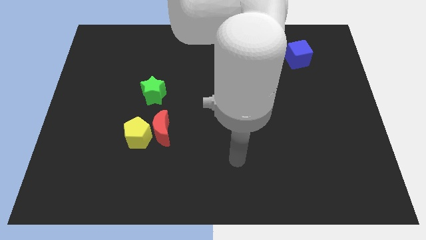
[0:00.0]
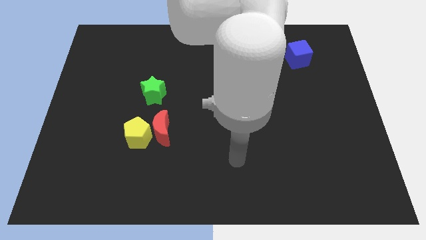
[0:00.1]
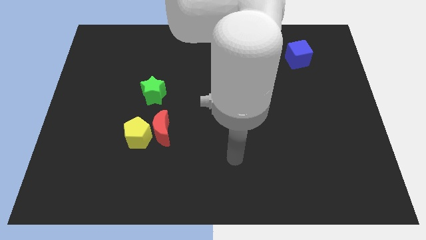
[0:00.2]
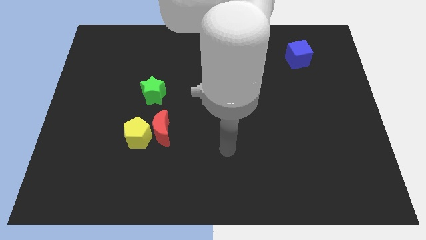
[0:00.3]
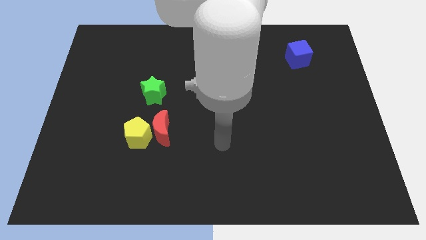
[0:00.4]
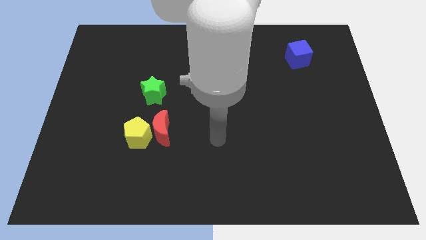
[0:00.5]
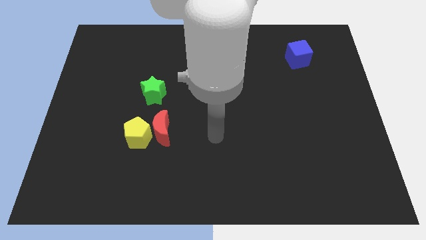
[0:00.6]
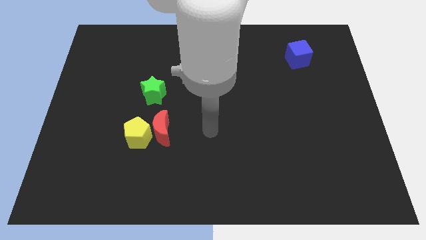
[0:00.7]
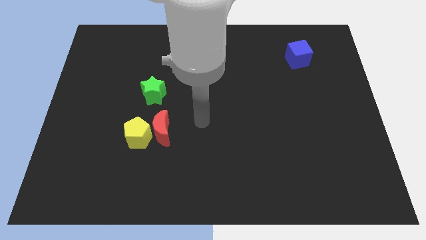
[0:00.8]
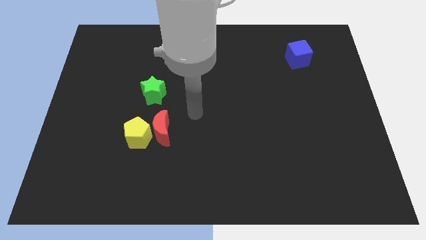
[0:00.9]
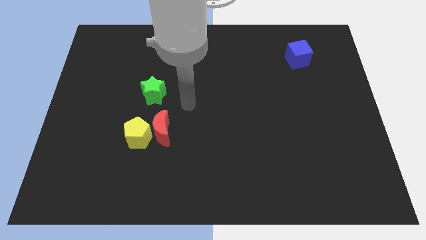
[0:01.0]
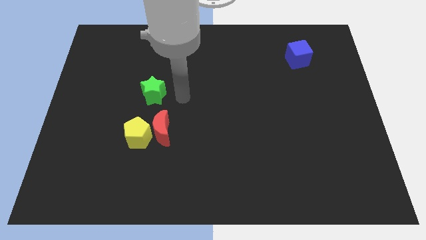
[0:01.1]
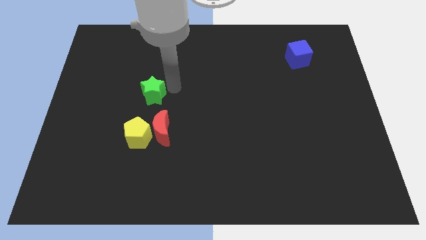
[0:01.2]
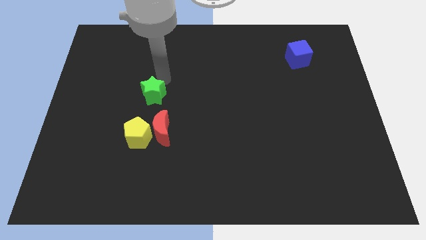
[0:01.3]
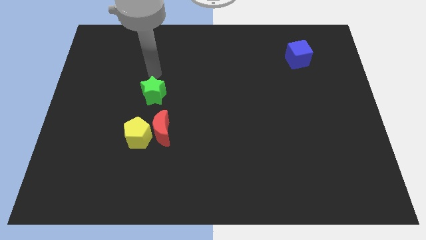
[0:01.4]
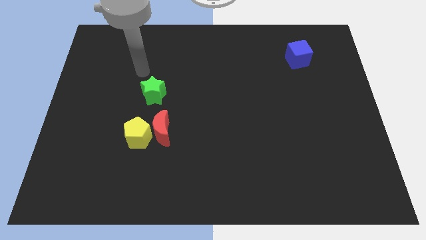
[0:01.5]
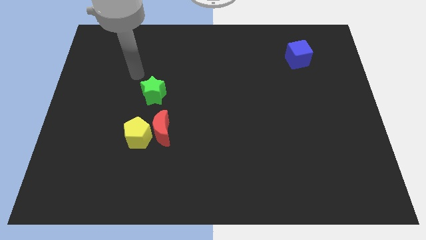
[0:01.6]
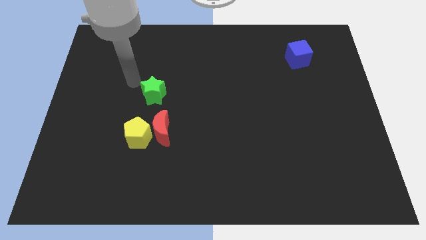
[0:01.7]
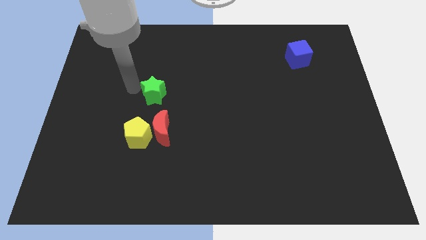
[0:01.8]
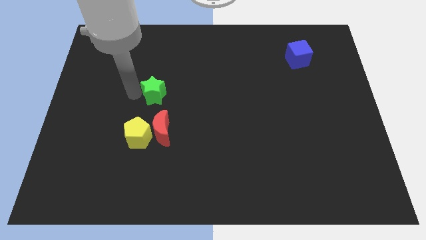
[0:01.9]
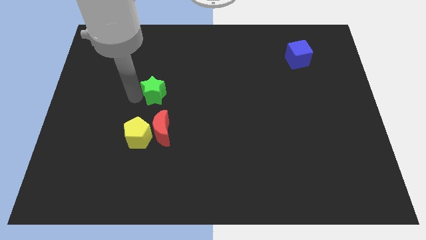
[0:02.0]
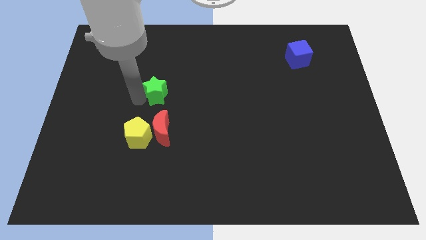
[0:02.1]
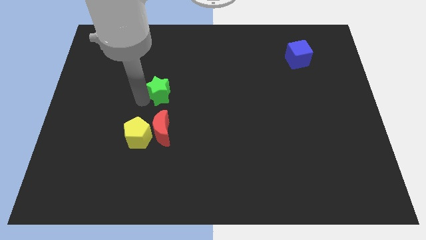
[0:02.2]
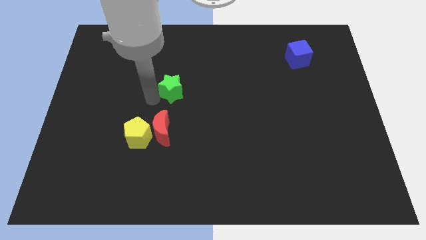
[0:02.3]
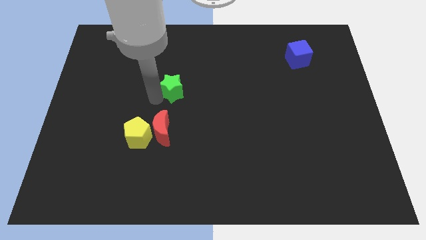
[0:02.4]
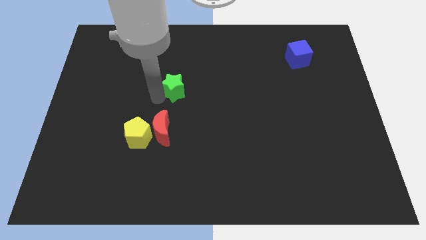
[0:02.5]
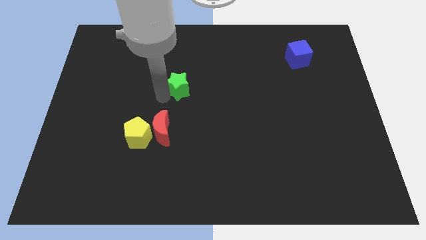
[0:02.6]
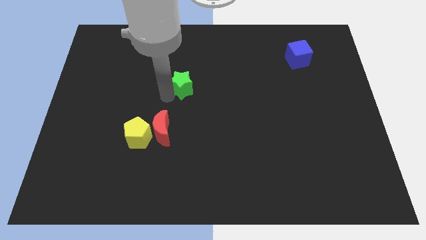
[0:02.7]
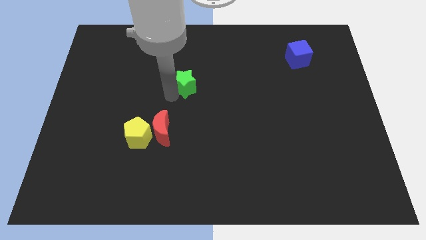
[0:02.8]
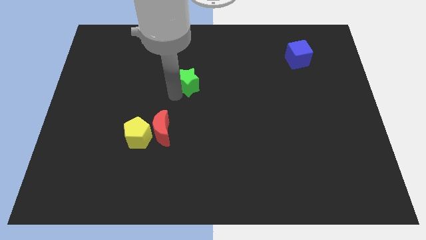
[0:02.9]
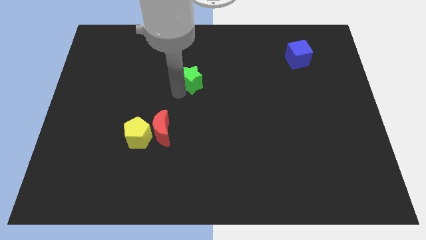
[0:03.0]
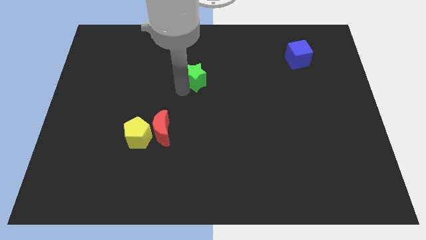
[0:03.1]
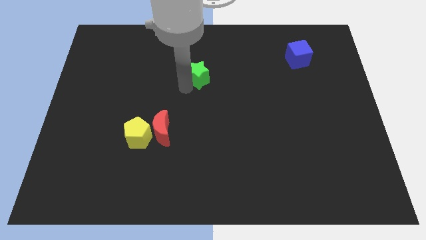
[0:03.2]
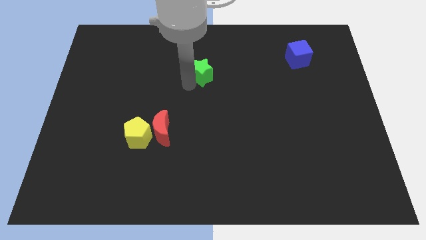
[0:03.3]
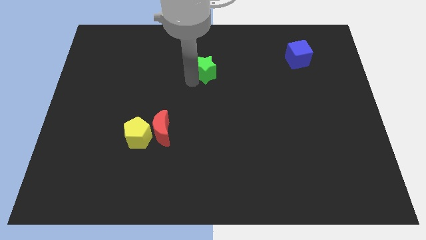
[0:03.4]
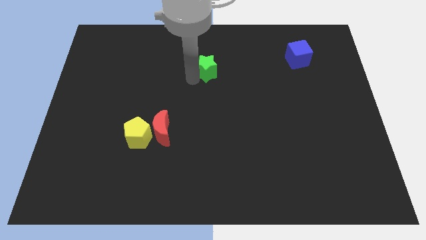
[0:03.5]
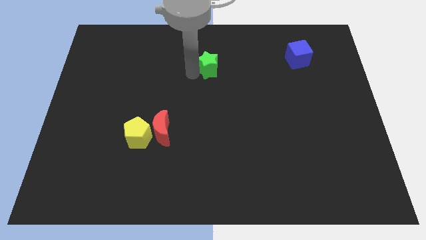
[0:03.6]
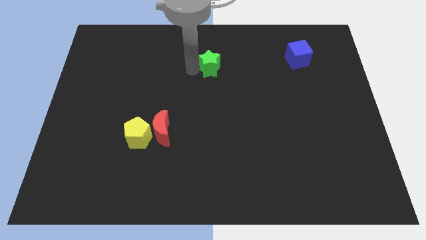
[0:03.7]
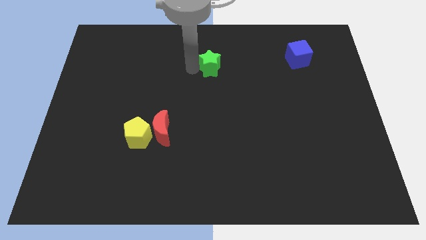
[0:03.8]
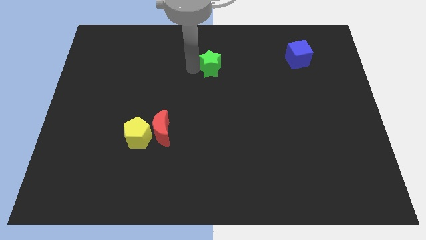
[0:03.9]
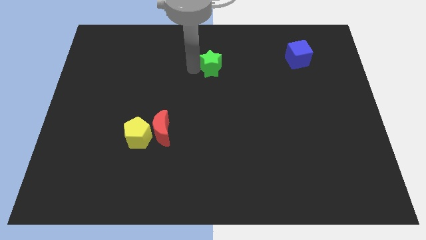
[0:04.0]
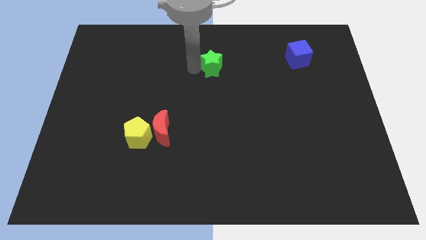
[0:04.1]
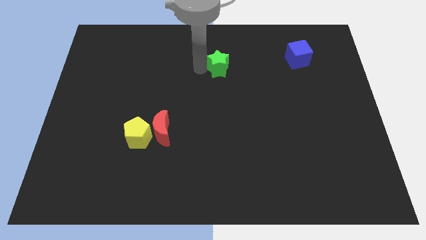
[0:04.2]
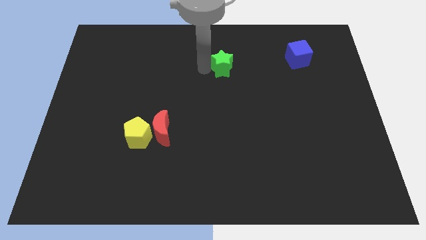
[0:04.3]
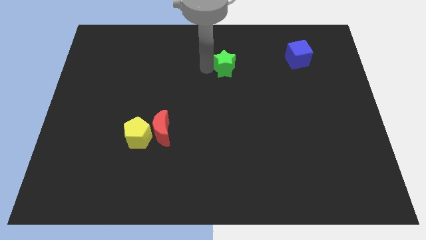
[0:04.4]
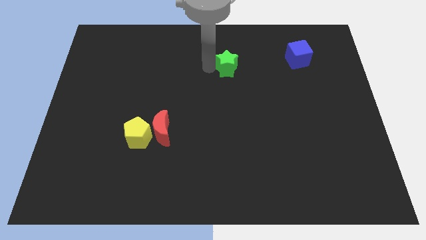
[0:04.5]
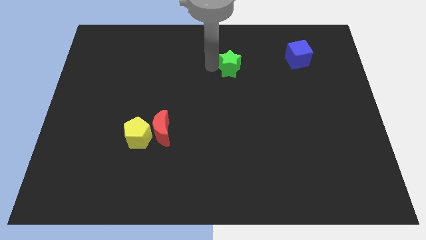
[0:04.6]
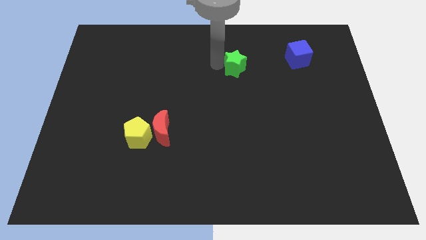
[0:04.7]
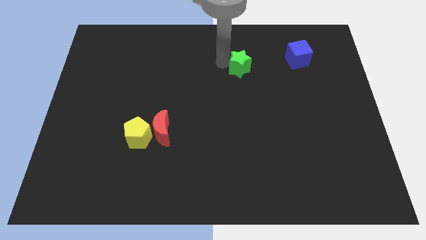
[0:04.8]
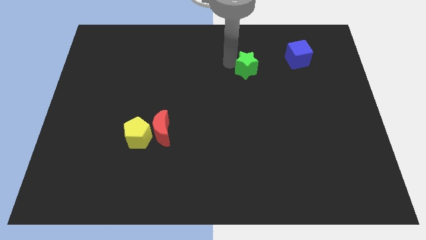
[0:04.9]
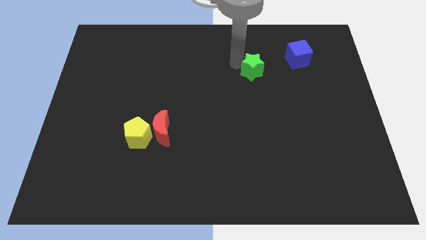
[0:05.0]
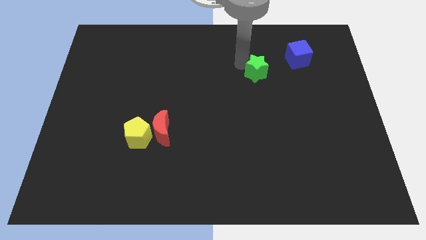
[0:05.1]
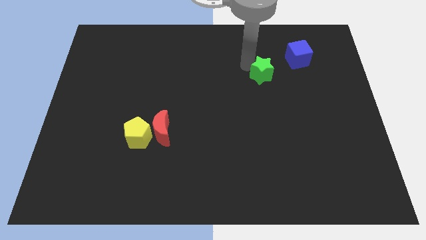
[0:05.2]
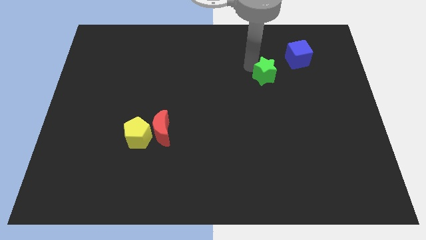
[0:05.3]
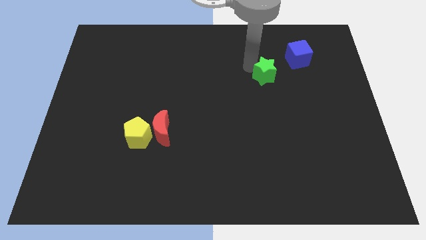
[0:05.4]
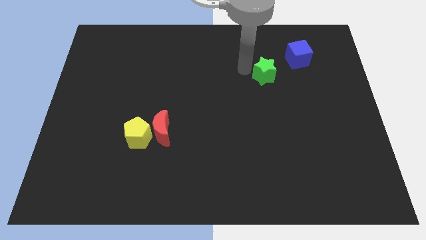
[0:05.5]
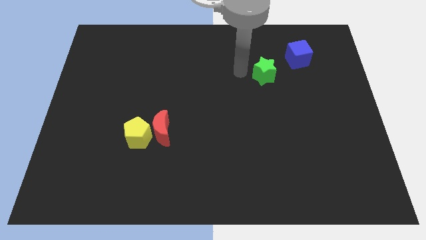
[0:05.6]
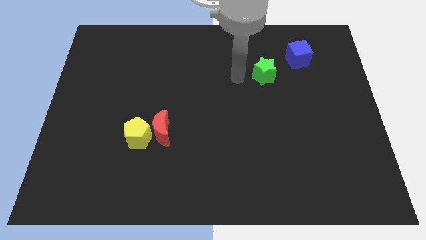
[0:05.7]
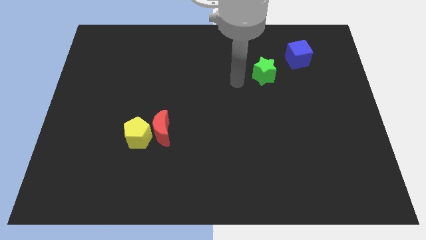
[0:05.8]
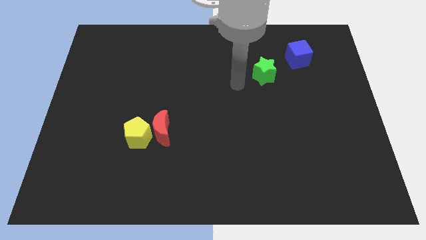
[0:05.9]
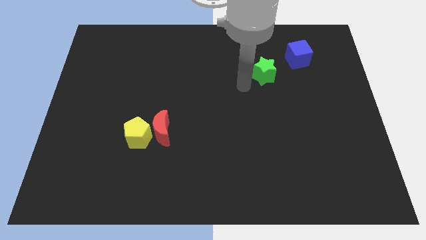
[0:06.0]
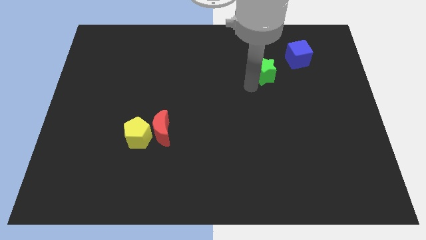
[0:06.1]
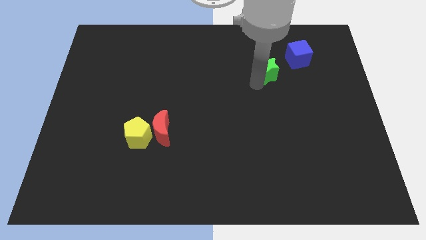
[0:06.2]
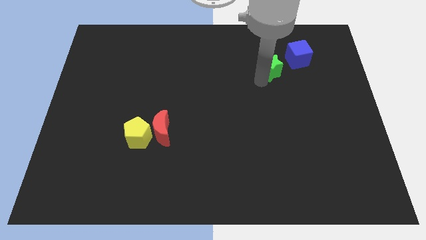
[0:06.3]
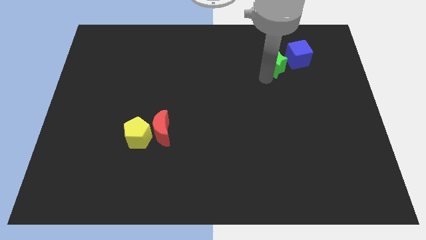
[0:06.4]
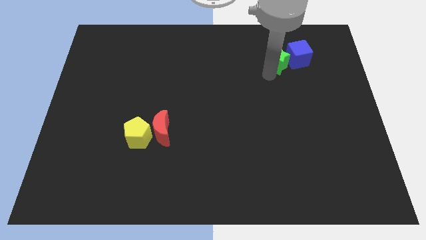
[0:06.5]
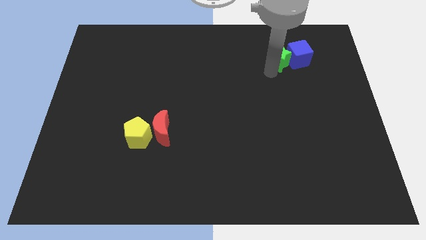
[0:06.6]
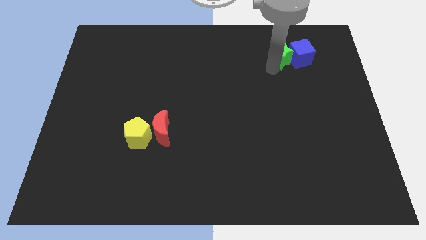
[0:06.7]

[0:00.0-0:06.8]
put the green block close to the blue cube

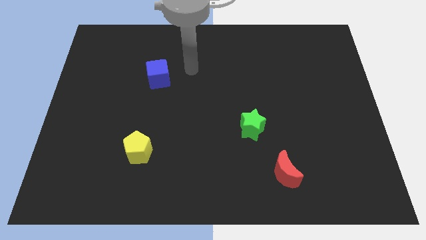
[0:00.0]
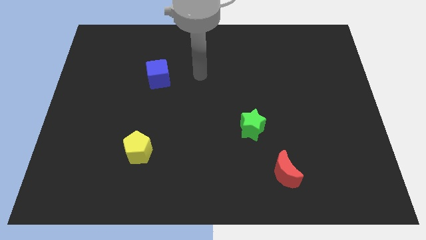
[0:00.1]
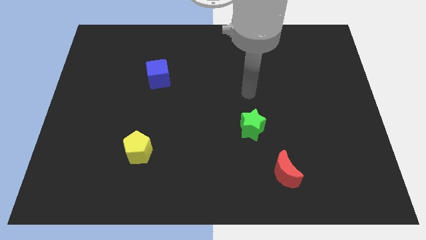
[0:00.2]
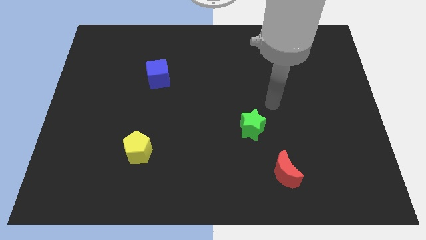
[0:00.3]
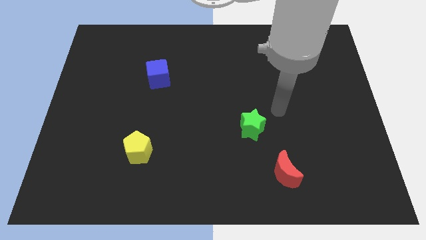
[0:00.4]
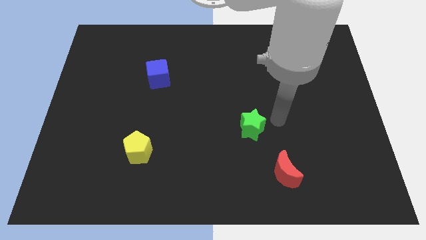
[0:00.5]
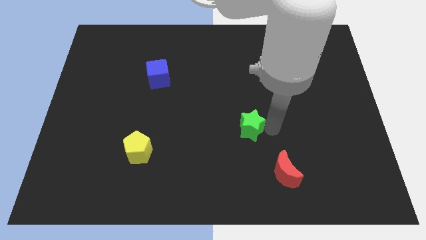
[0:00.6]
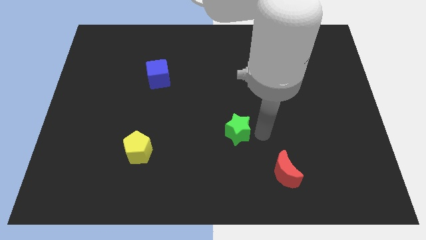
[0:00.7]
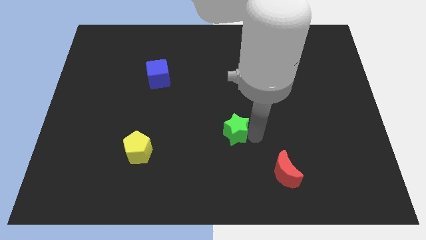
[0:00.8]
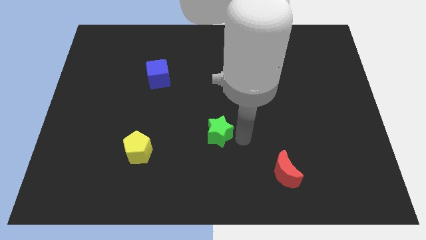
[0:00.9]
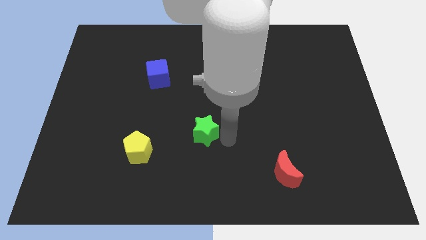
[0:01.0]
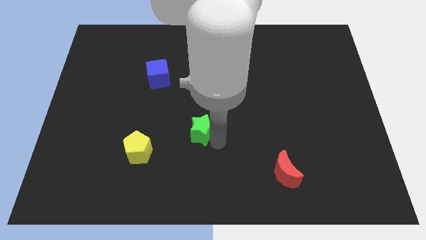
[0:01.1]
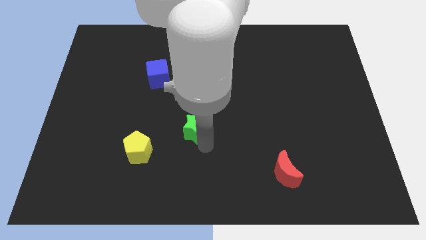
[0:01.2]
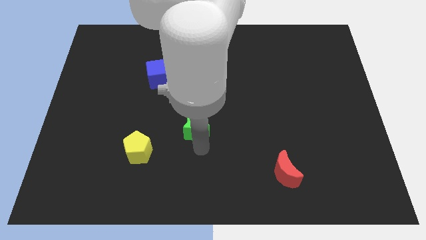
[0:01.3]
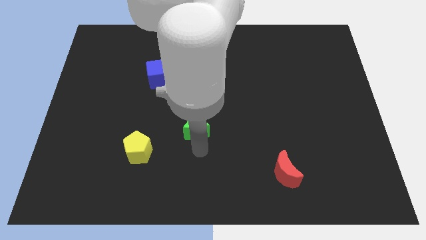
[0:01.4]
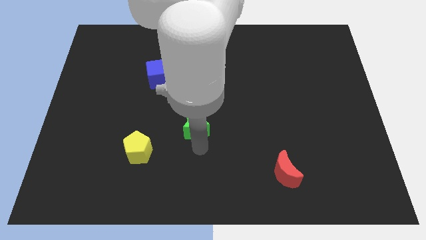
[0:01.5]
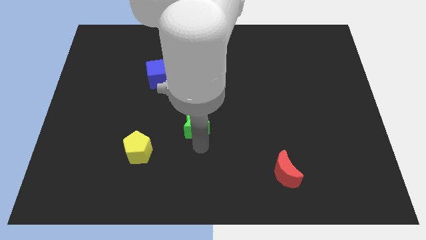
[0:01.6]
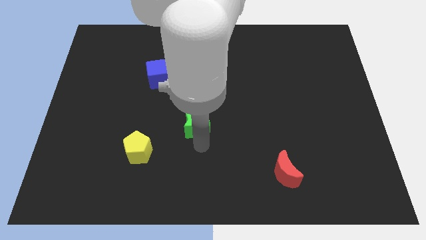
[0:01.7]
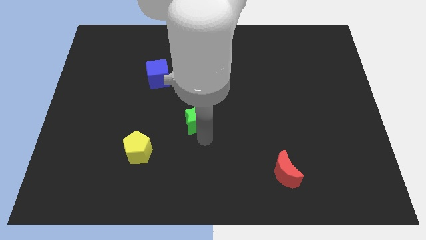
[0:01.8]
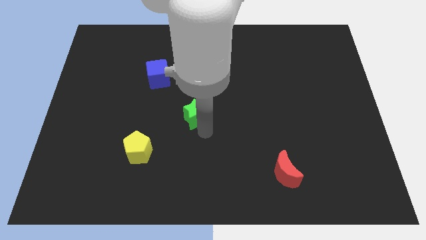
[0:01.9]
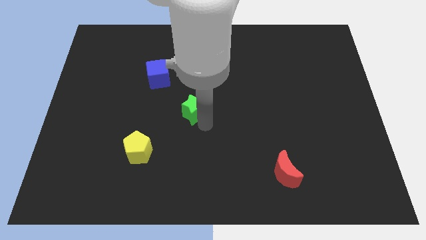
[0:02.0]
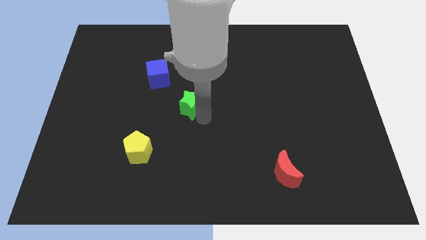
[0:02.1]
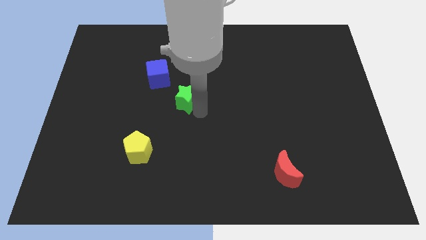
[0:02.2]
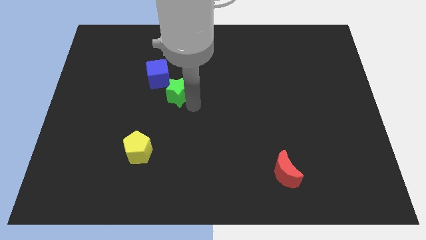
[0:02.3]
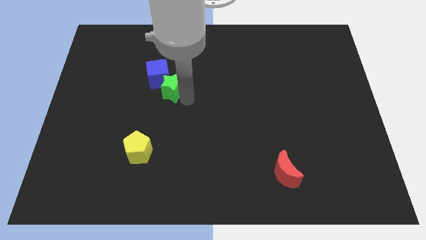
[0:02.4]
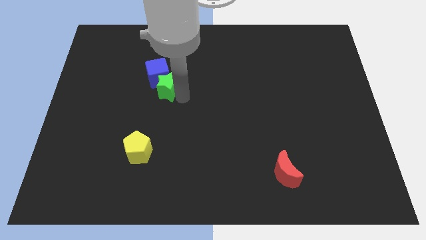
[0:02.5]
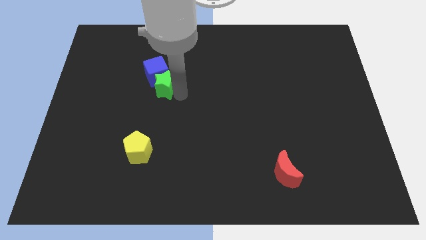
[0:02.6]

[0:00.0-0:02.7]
slide the green block towards the blue cube
